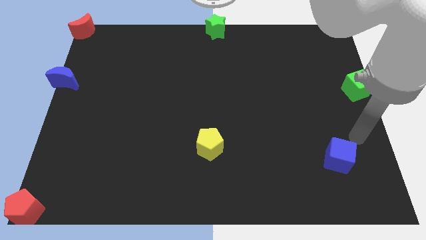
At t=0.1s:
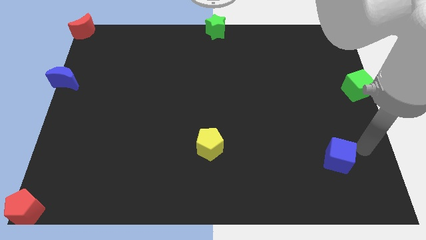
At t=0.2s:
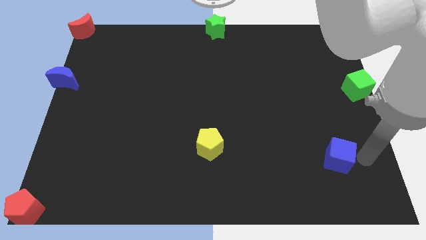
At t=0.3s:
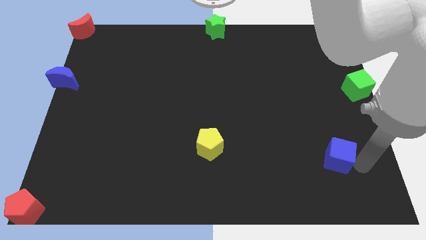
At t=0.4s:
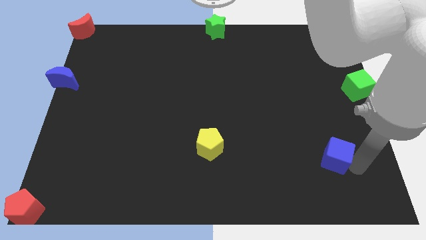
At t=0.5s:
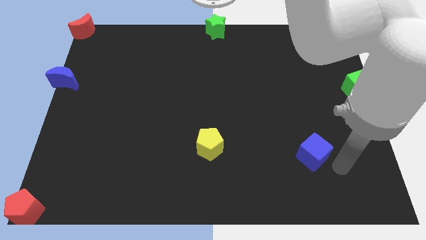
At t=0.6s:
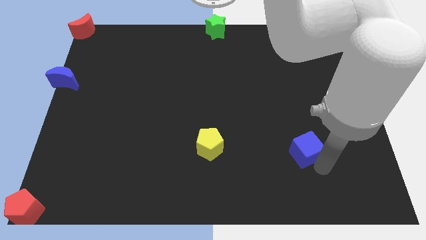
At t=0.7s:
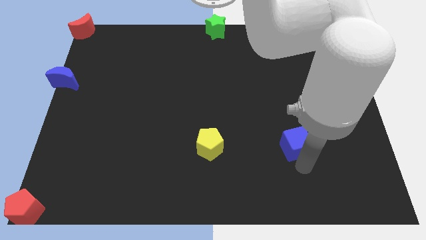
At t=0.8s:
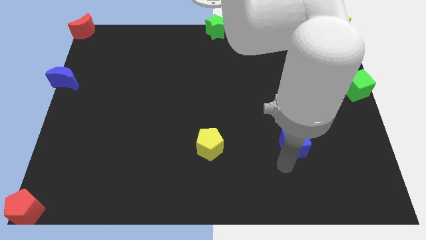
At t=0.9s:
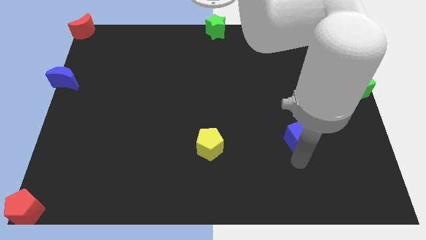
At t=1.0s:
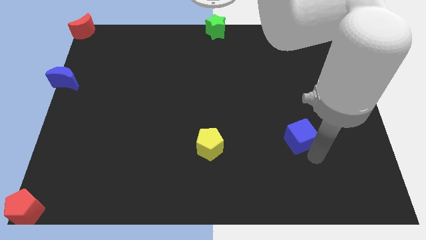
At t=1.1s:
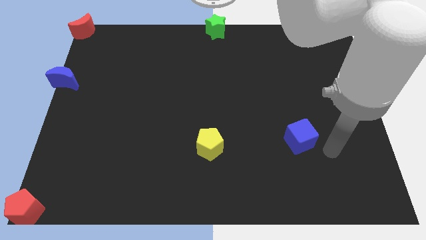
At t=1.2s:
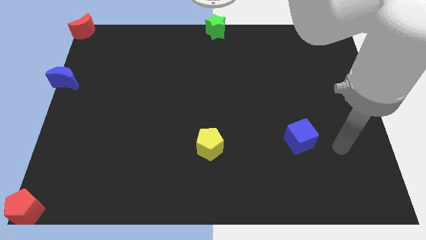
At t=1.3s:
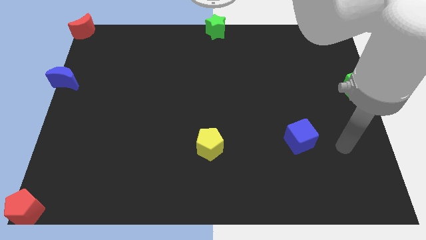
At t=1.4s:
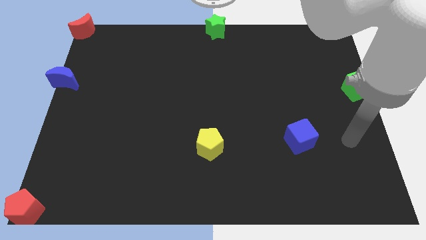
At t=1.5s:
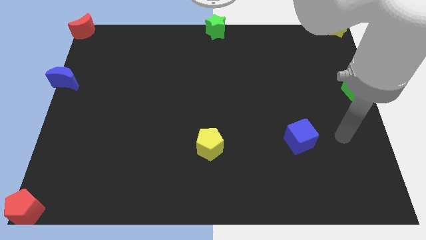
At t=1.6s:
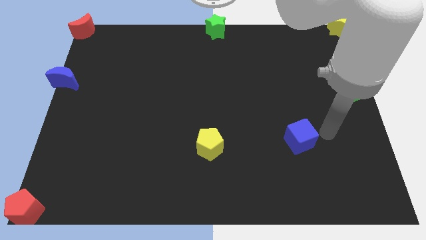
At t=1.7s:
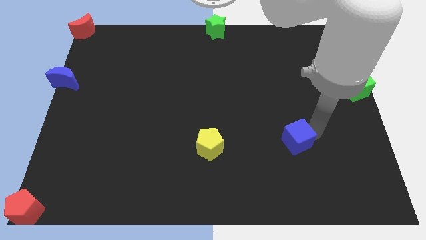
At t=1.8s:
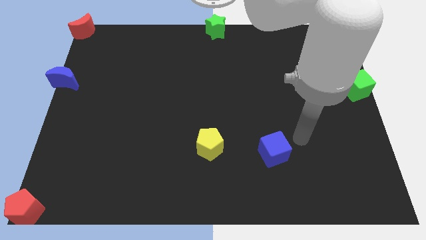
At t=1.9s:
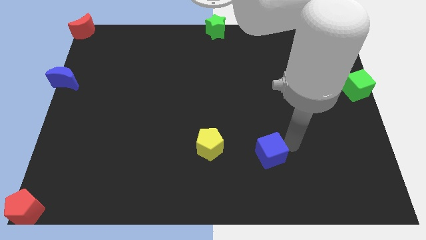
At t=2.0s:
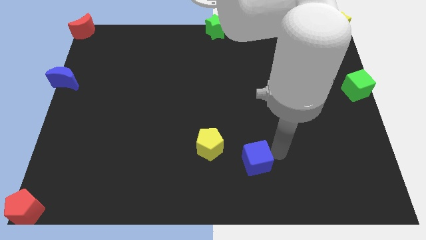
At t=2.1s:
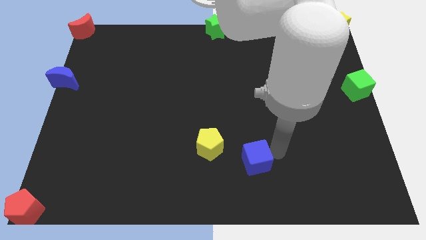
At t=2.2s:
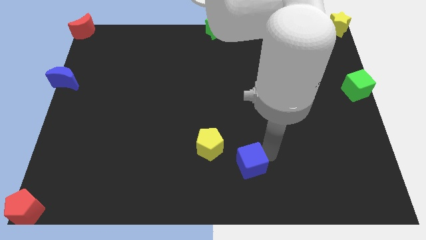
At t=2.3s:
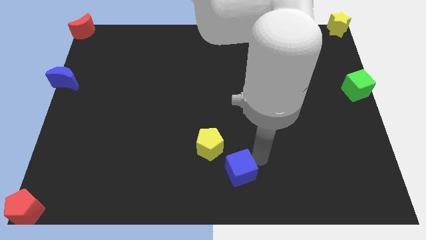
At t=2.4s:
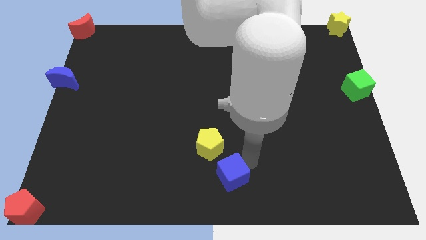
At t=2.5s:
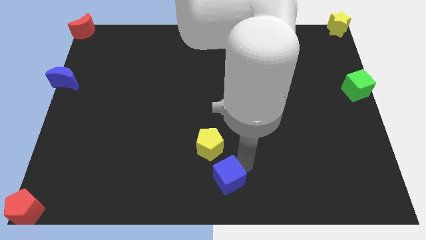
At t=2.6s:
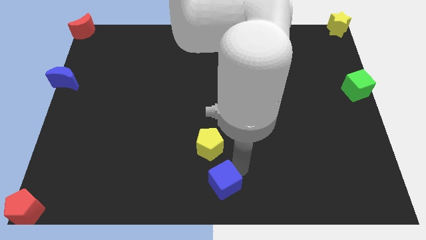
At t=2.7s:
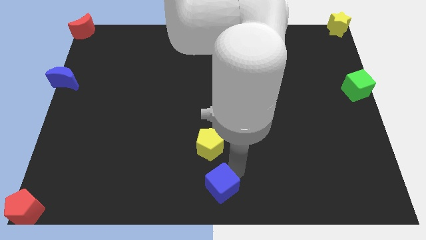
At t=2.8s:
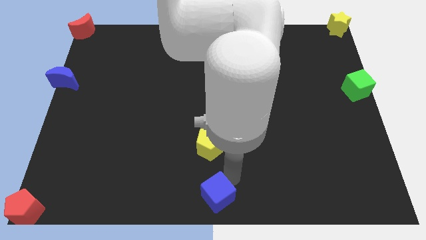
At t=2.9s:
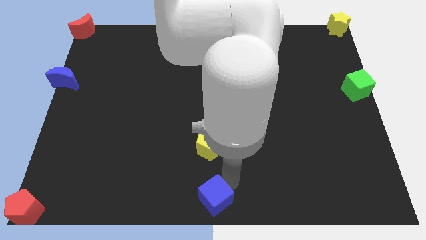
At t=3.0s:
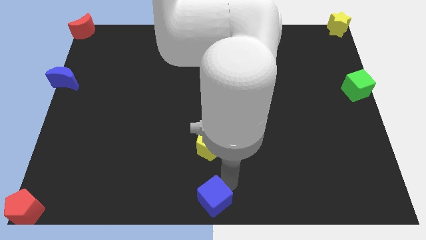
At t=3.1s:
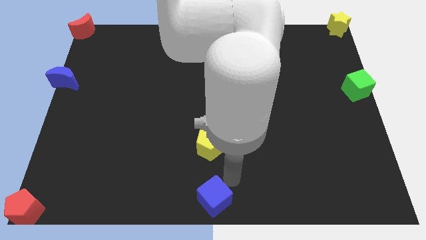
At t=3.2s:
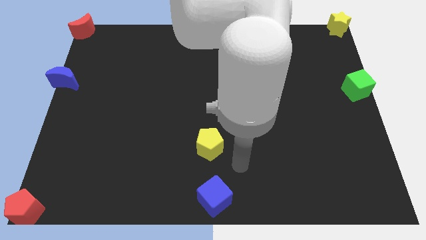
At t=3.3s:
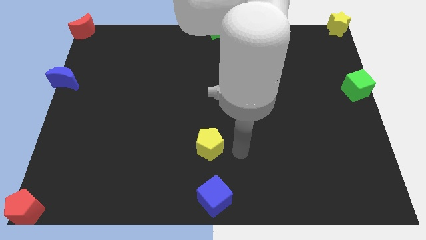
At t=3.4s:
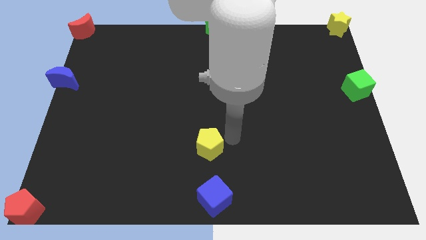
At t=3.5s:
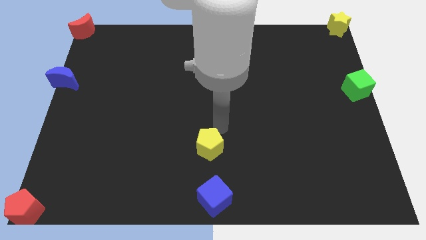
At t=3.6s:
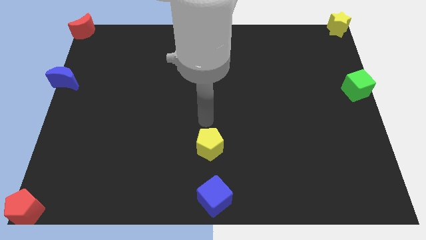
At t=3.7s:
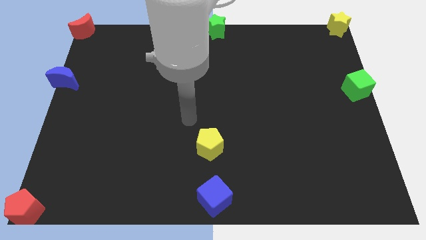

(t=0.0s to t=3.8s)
put the blue cube vertically below the yellow pentagon

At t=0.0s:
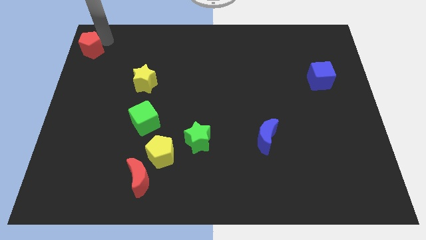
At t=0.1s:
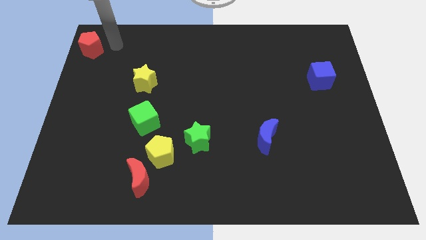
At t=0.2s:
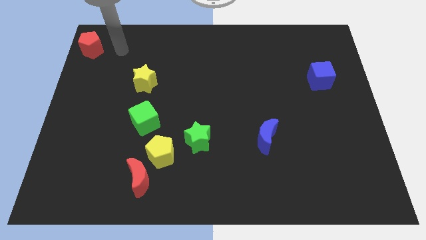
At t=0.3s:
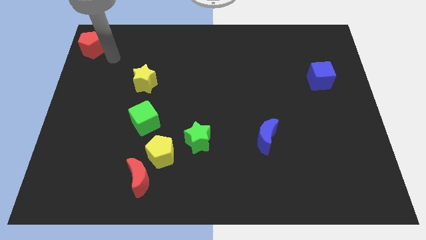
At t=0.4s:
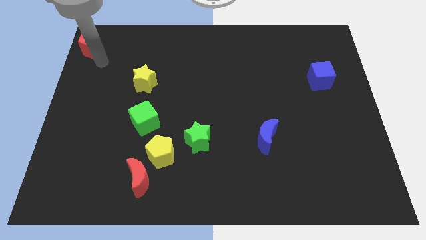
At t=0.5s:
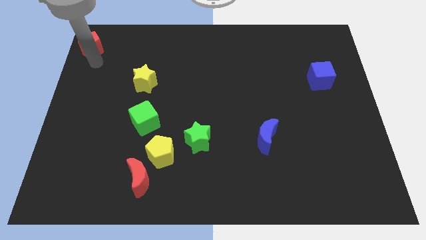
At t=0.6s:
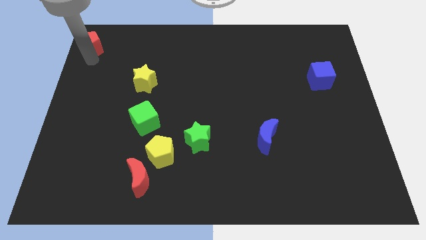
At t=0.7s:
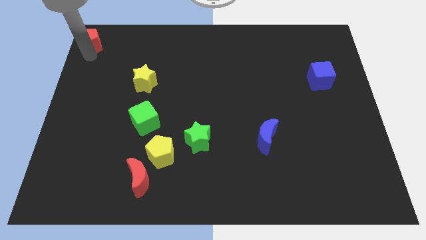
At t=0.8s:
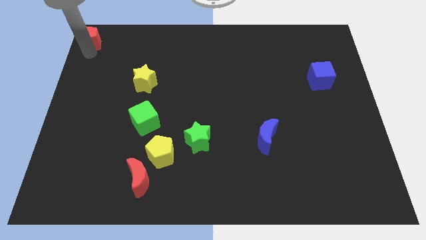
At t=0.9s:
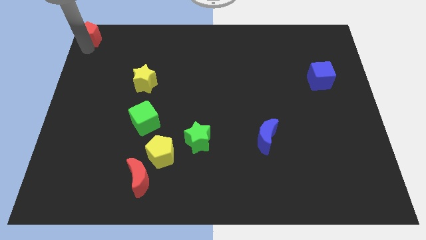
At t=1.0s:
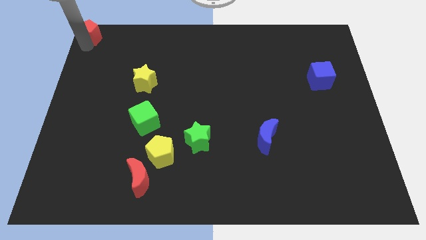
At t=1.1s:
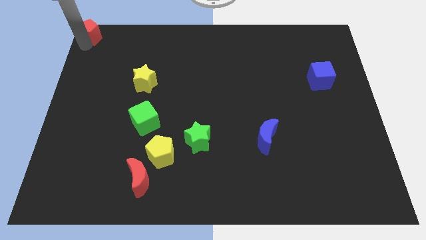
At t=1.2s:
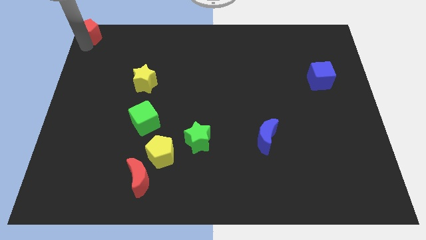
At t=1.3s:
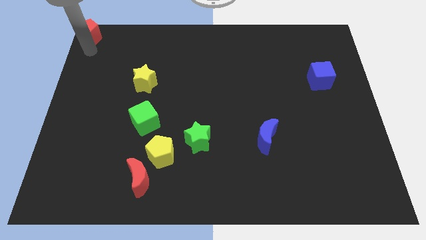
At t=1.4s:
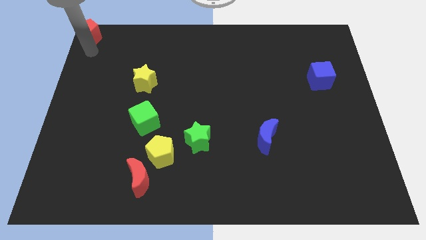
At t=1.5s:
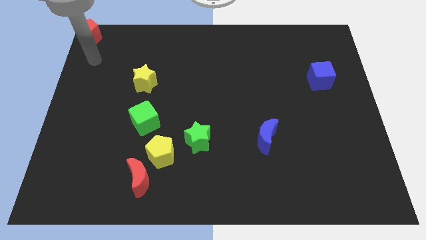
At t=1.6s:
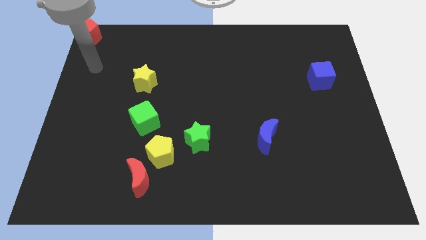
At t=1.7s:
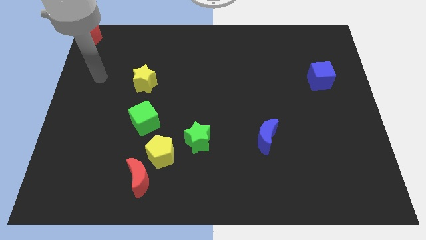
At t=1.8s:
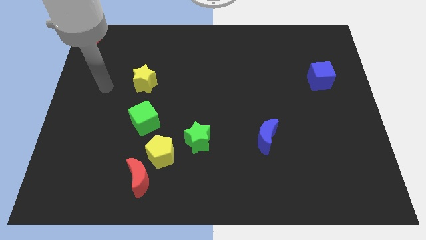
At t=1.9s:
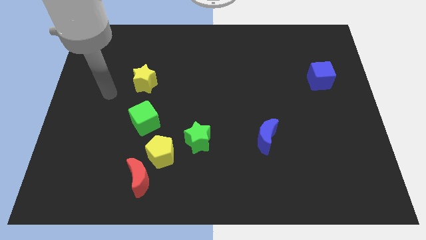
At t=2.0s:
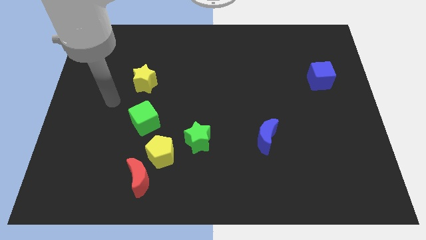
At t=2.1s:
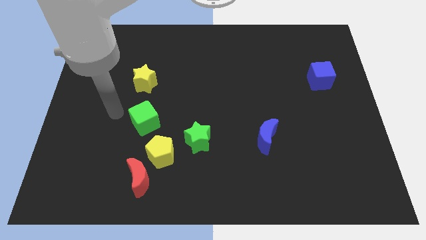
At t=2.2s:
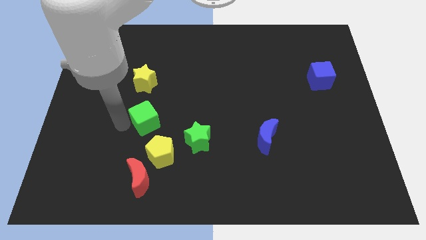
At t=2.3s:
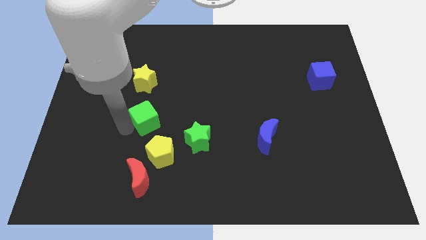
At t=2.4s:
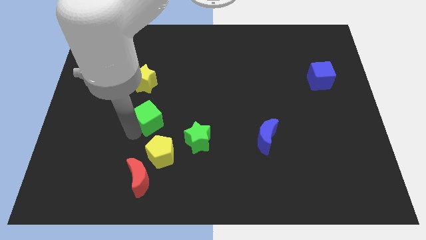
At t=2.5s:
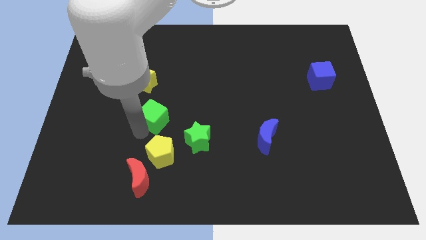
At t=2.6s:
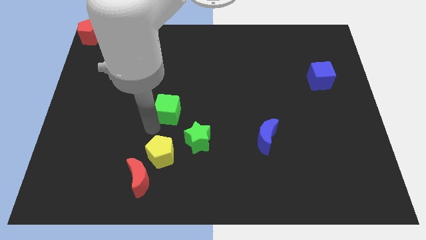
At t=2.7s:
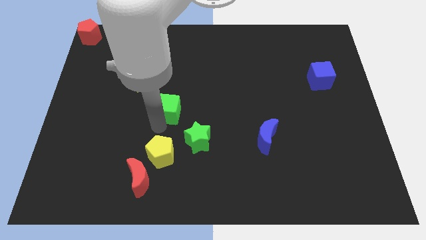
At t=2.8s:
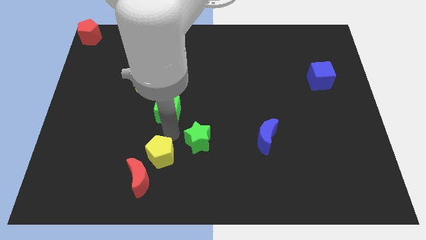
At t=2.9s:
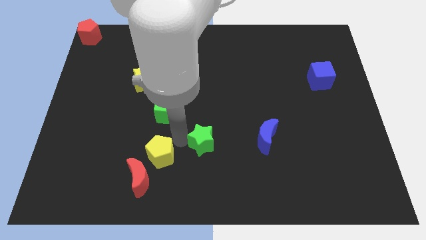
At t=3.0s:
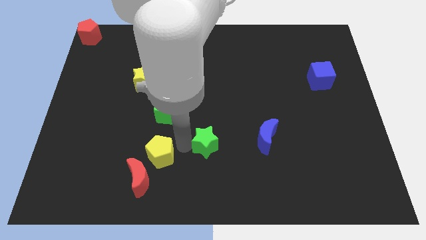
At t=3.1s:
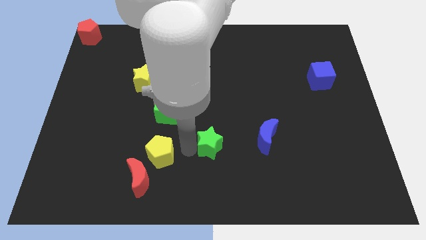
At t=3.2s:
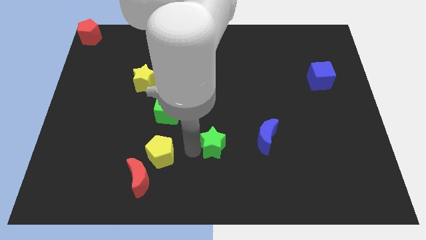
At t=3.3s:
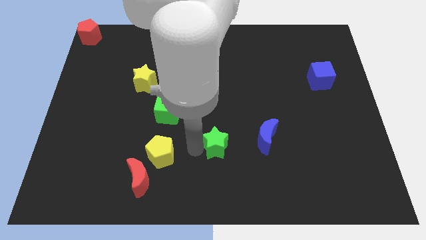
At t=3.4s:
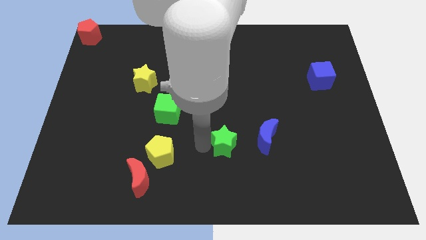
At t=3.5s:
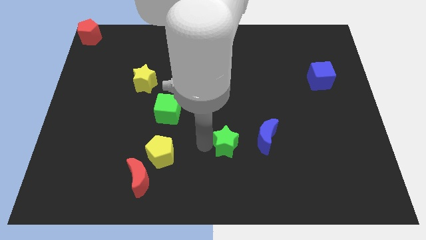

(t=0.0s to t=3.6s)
push the green star towards blue crescent

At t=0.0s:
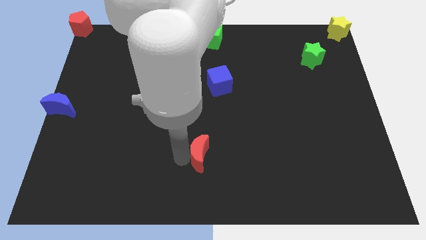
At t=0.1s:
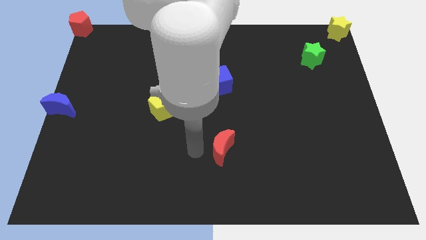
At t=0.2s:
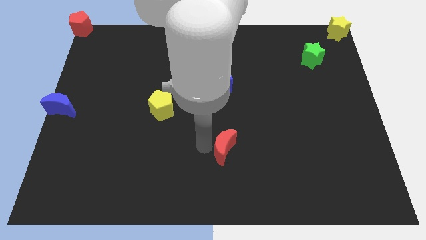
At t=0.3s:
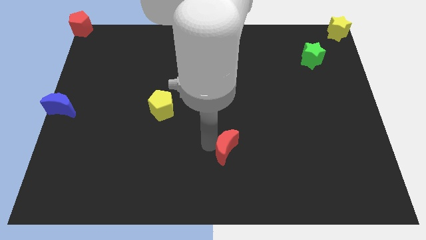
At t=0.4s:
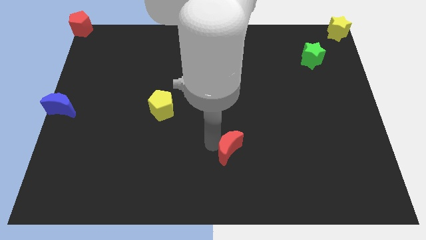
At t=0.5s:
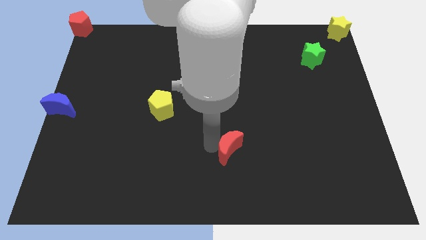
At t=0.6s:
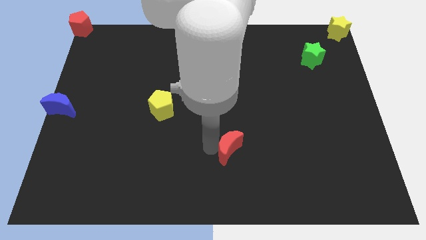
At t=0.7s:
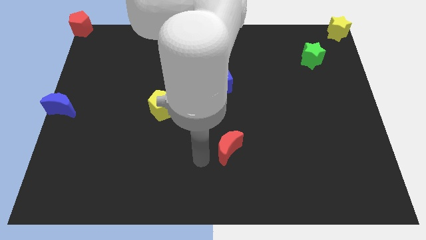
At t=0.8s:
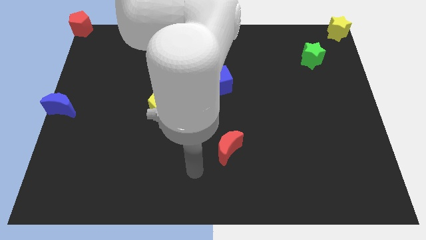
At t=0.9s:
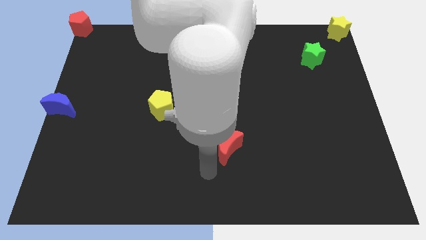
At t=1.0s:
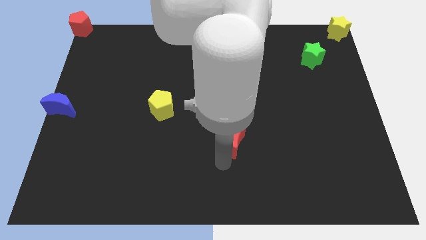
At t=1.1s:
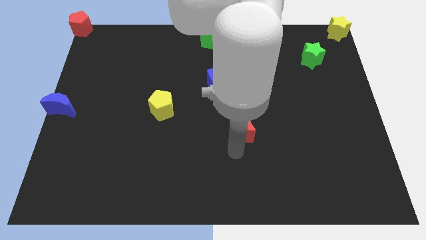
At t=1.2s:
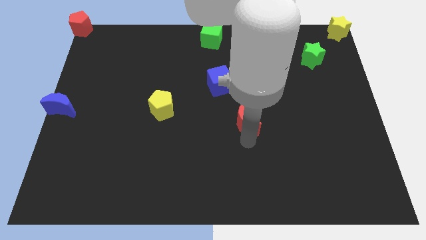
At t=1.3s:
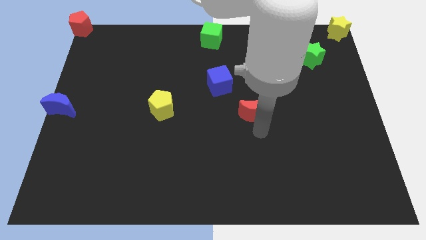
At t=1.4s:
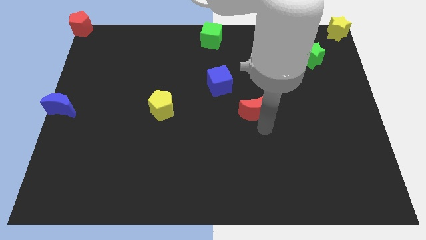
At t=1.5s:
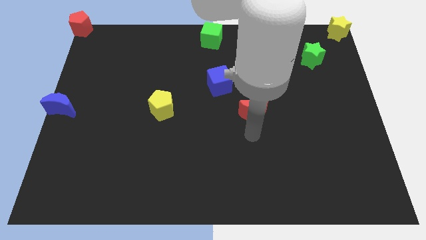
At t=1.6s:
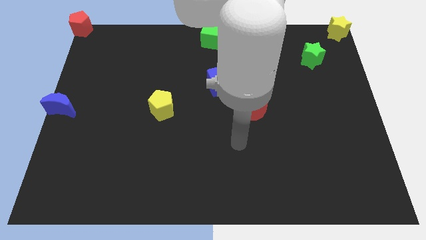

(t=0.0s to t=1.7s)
place the red crescent to the top right
